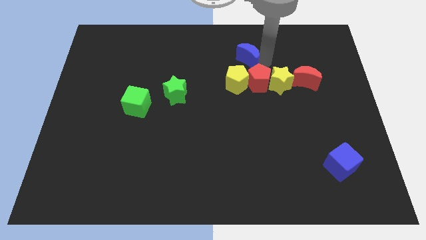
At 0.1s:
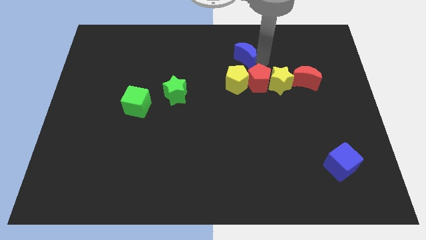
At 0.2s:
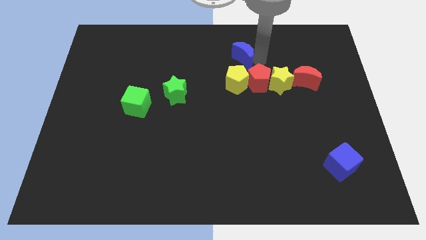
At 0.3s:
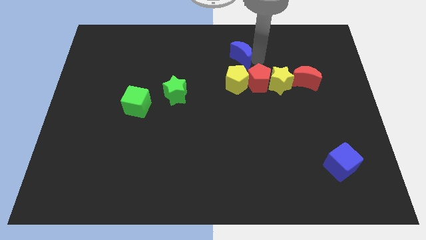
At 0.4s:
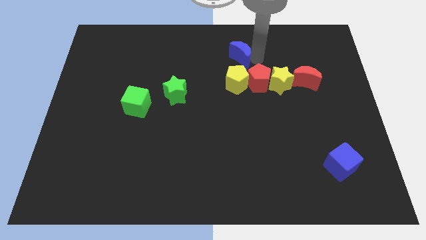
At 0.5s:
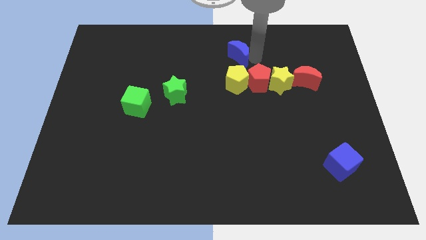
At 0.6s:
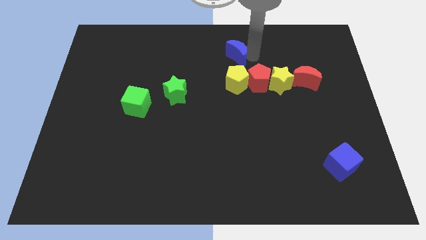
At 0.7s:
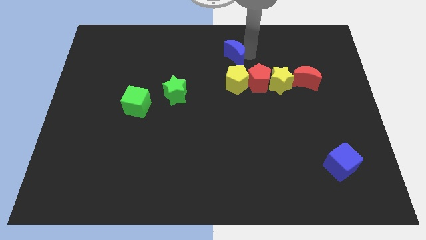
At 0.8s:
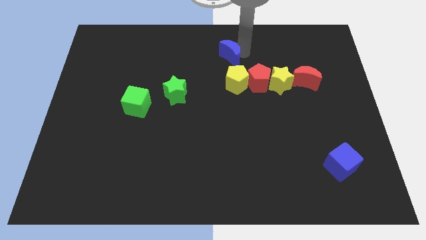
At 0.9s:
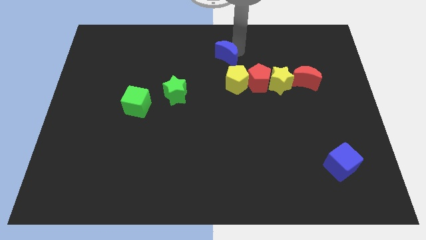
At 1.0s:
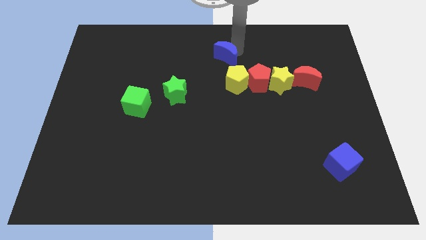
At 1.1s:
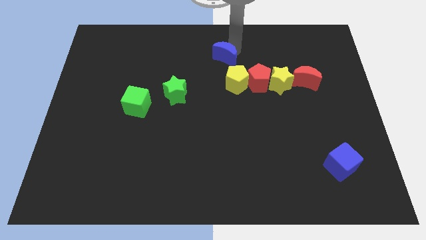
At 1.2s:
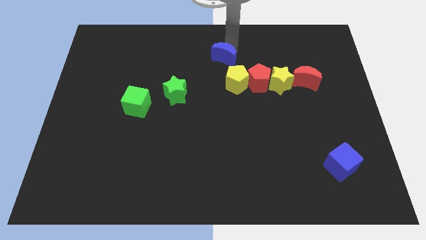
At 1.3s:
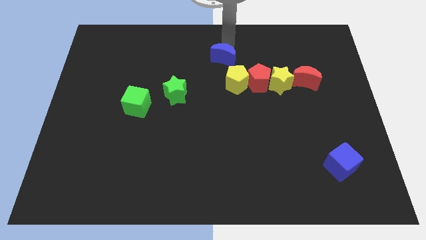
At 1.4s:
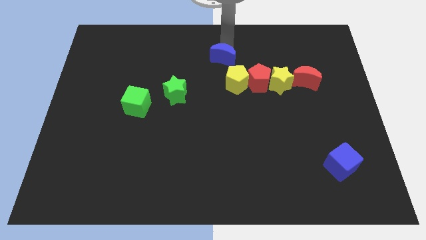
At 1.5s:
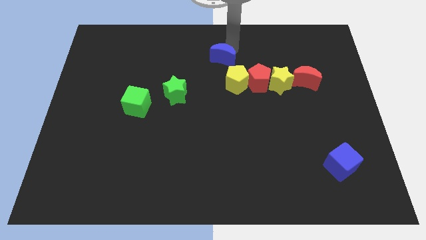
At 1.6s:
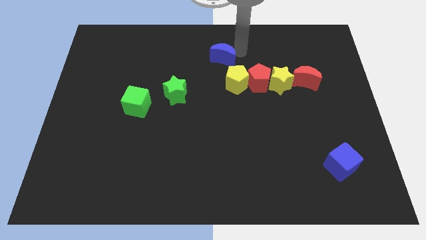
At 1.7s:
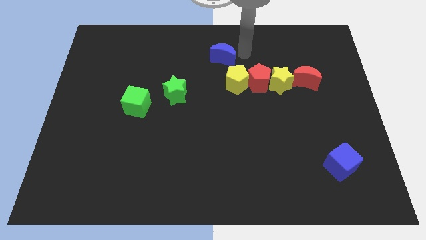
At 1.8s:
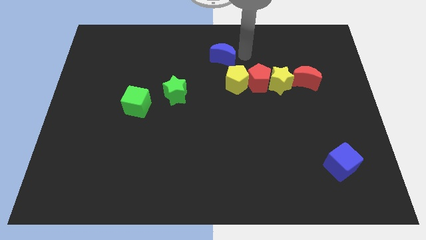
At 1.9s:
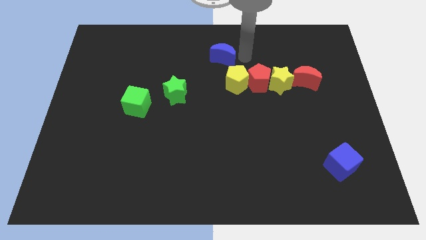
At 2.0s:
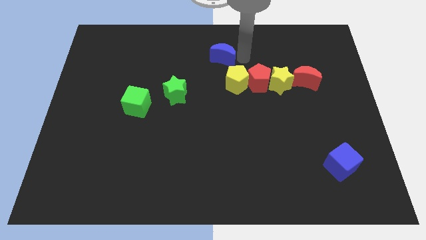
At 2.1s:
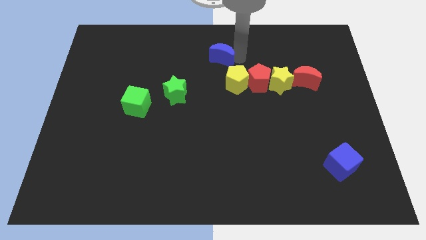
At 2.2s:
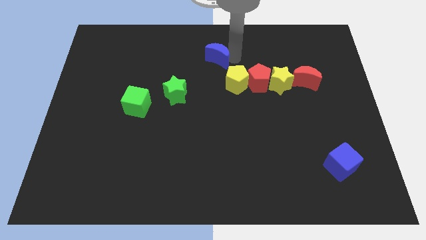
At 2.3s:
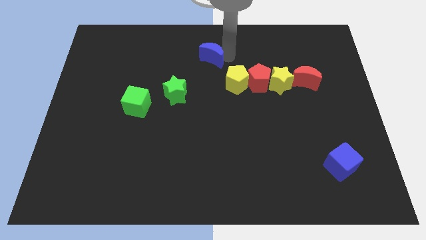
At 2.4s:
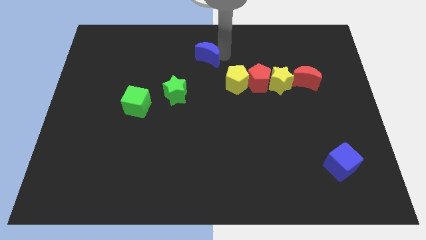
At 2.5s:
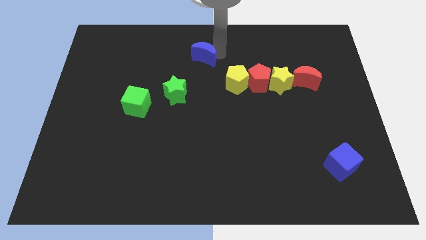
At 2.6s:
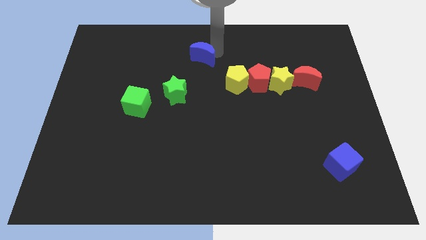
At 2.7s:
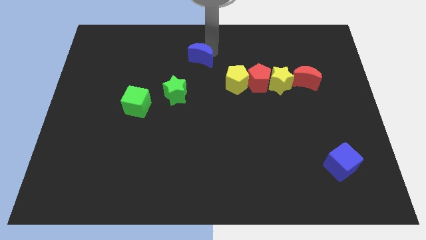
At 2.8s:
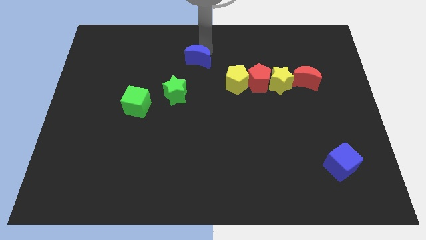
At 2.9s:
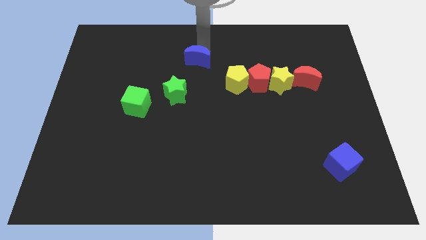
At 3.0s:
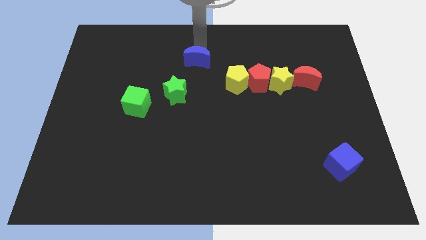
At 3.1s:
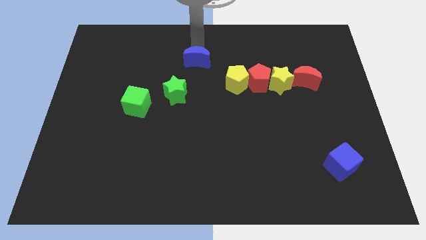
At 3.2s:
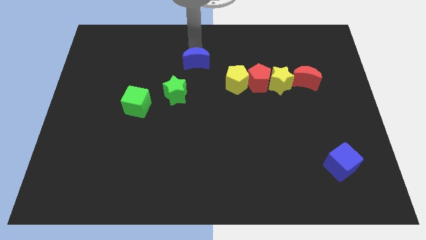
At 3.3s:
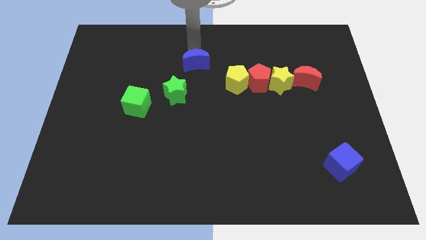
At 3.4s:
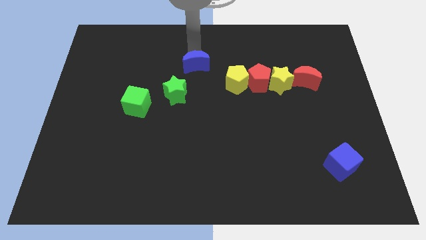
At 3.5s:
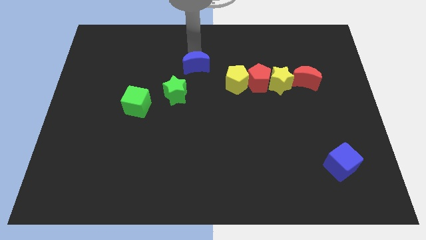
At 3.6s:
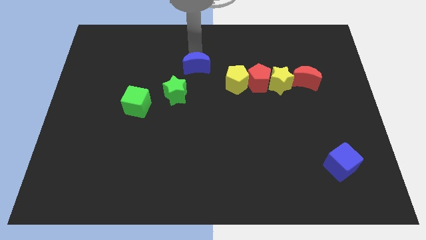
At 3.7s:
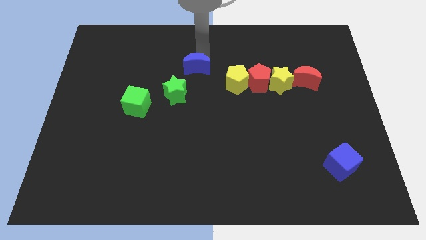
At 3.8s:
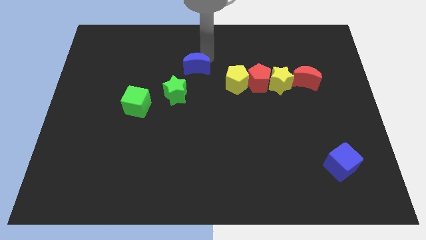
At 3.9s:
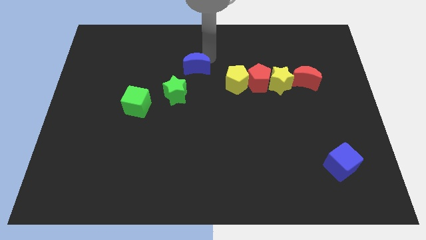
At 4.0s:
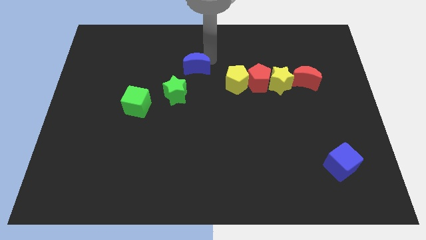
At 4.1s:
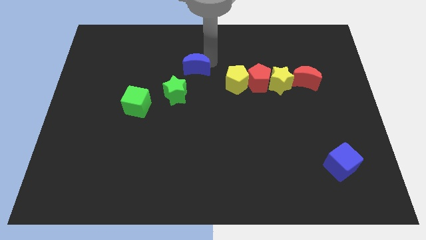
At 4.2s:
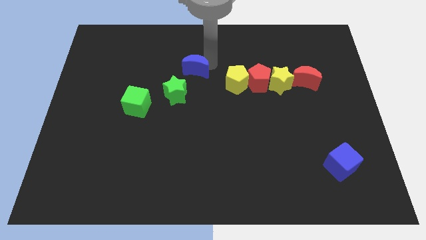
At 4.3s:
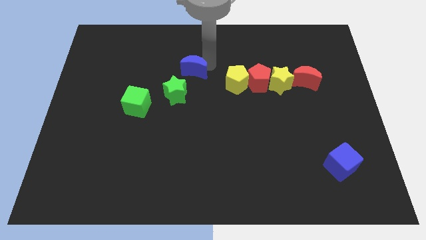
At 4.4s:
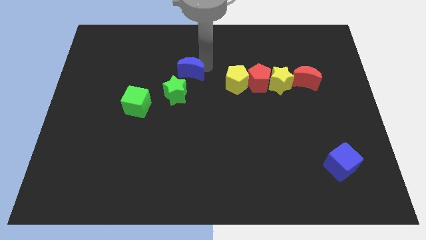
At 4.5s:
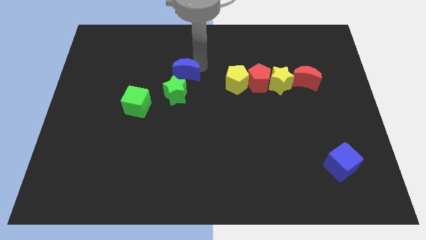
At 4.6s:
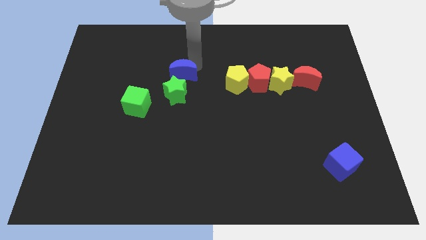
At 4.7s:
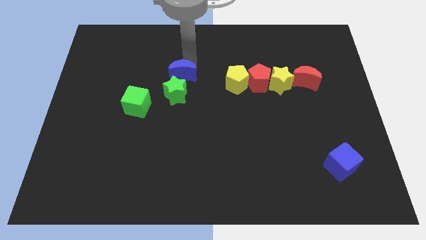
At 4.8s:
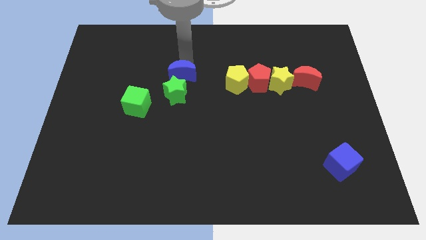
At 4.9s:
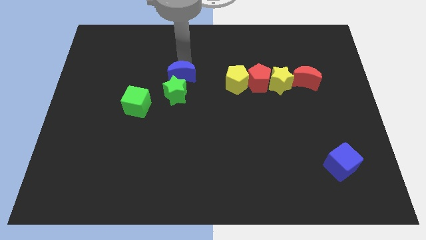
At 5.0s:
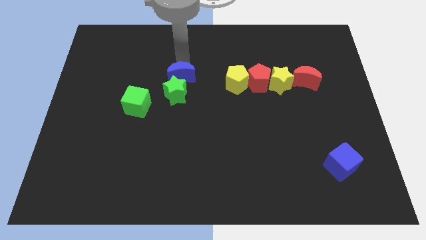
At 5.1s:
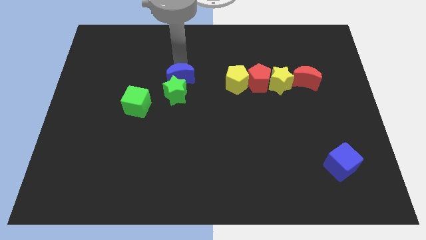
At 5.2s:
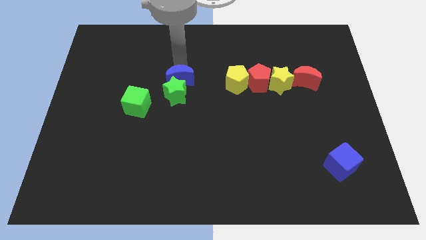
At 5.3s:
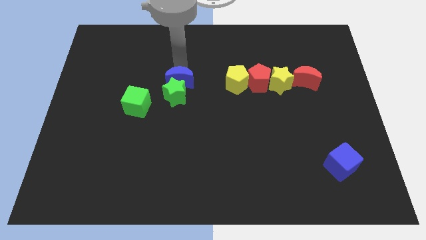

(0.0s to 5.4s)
push the blue crescent to the top of green star

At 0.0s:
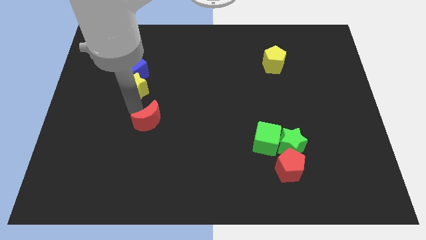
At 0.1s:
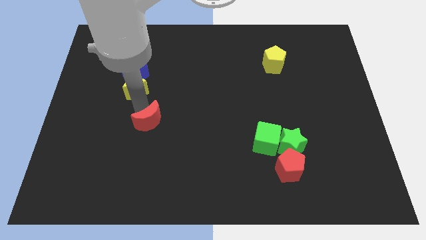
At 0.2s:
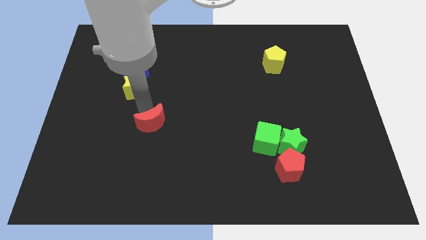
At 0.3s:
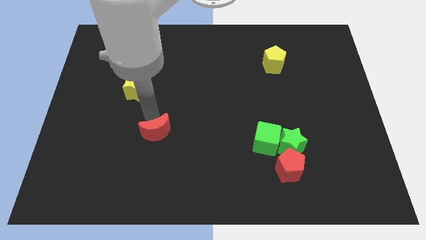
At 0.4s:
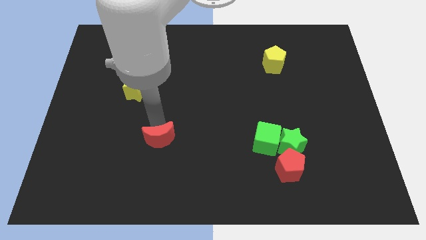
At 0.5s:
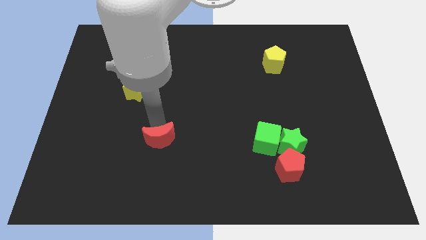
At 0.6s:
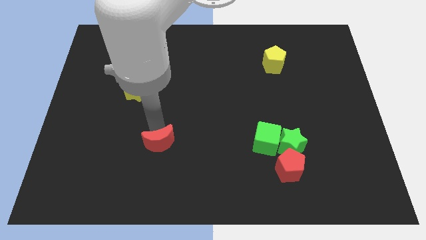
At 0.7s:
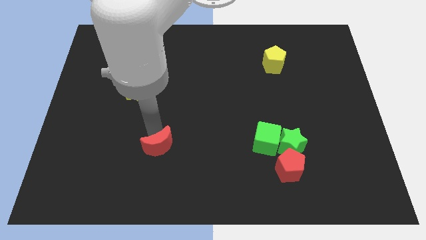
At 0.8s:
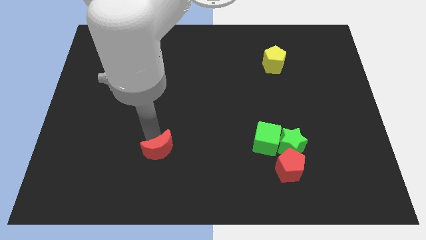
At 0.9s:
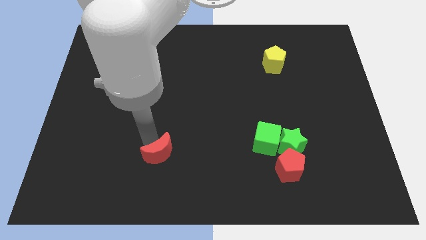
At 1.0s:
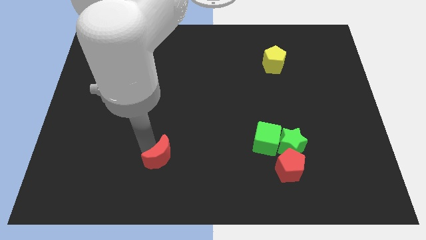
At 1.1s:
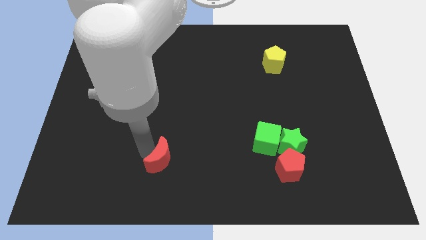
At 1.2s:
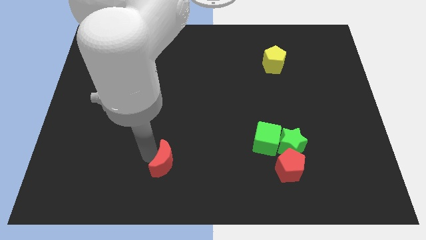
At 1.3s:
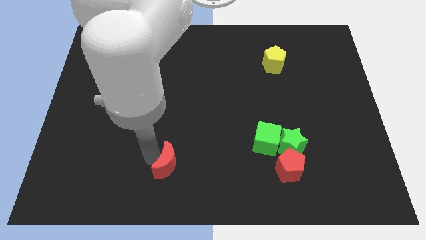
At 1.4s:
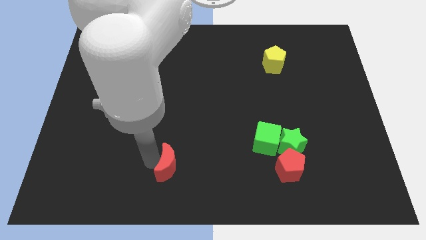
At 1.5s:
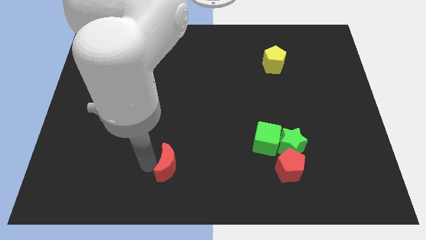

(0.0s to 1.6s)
push the red moon parallel left of the red pentagon

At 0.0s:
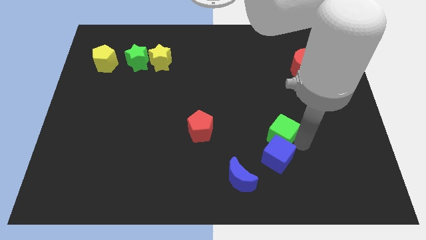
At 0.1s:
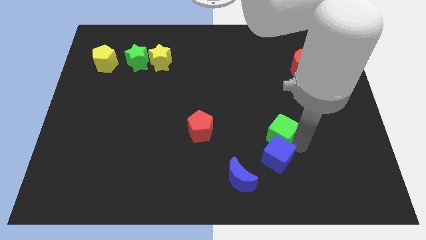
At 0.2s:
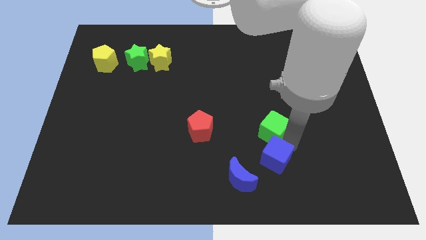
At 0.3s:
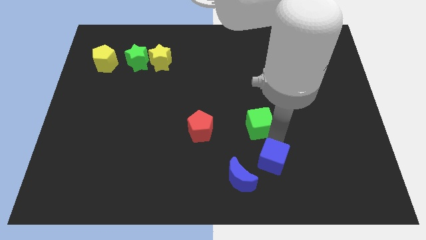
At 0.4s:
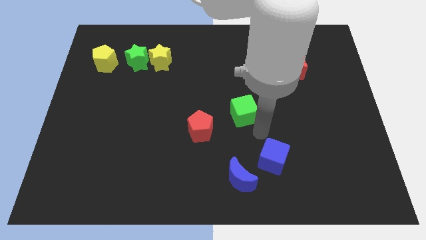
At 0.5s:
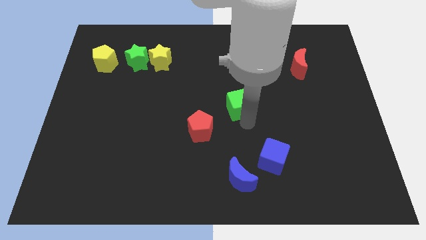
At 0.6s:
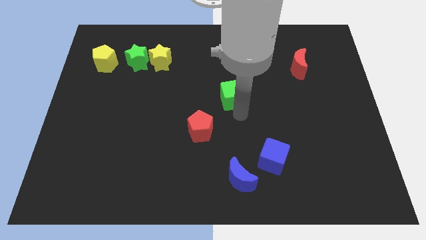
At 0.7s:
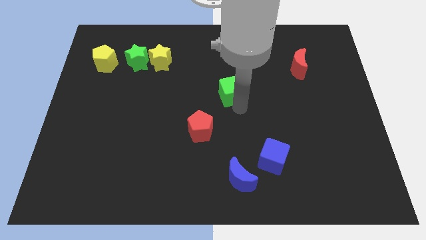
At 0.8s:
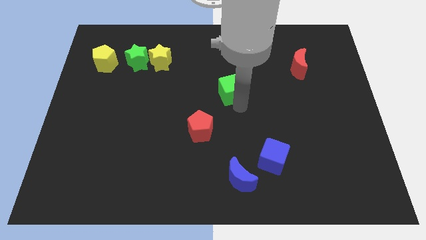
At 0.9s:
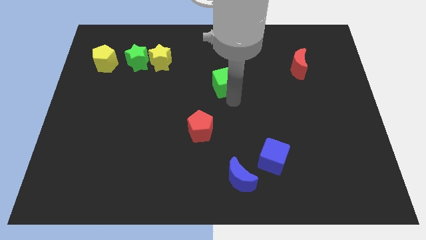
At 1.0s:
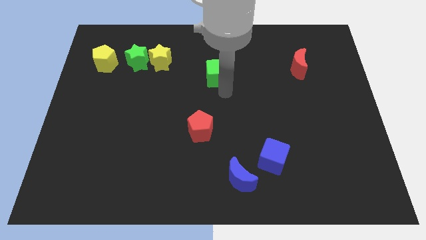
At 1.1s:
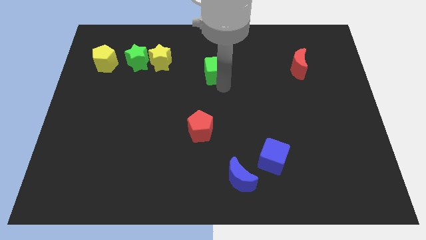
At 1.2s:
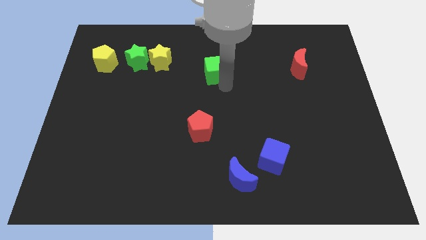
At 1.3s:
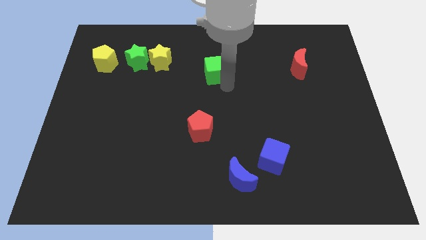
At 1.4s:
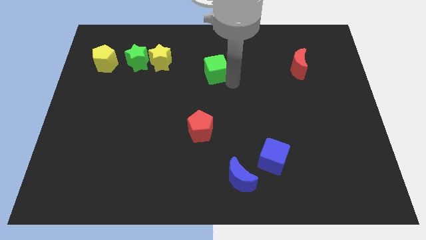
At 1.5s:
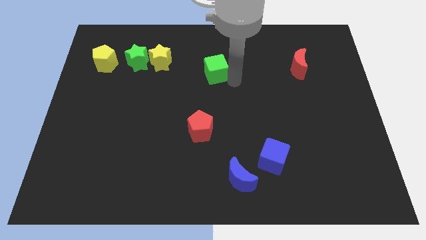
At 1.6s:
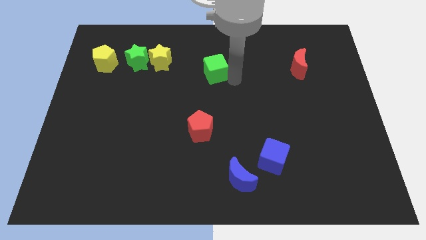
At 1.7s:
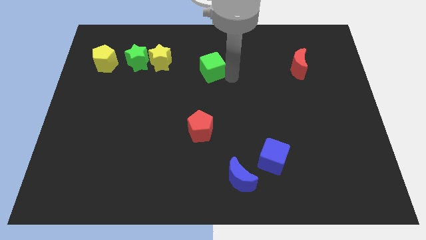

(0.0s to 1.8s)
push the green cube to the left side of the red moon

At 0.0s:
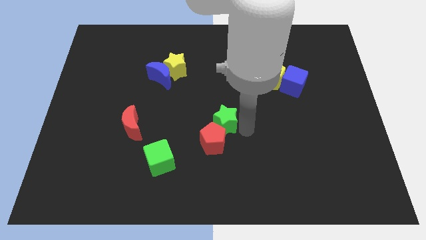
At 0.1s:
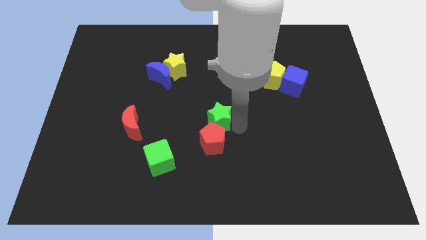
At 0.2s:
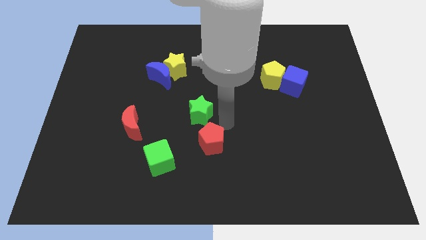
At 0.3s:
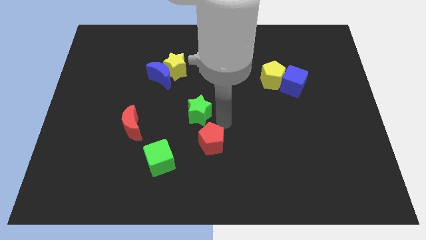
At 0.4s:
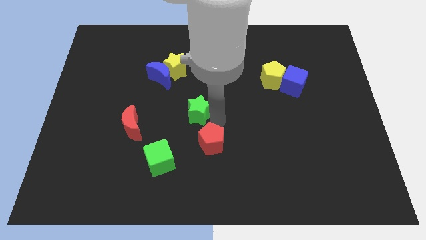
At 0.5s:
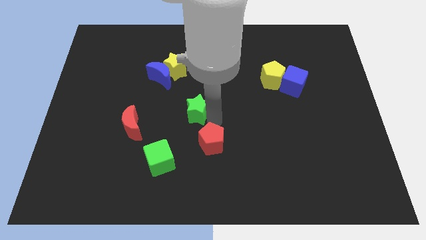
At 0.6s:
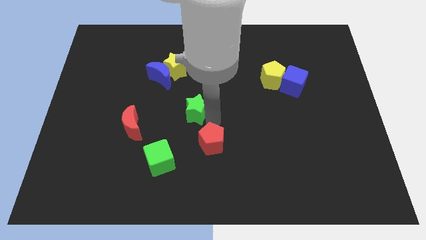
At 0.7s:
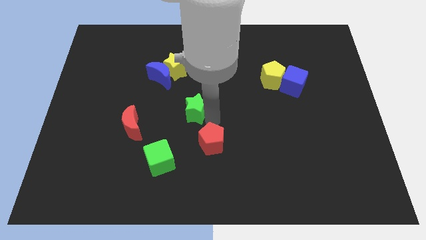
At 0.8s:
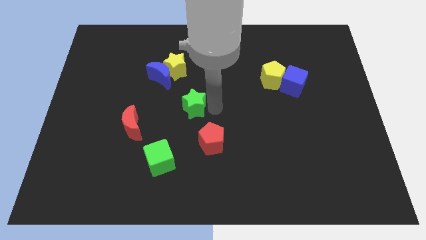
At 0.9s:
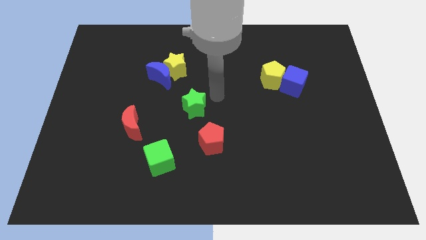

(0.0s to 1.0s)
put the green star between the yellow star and red pentagon
